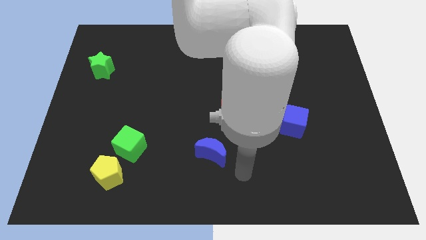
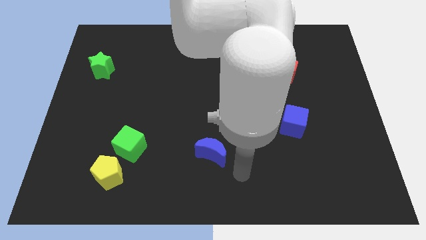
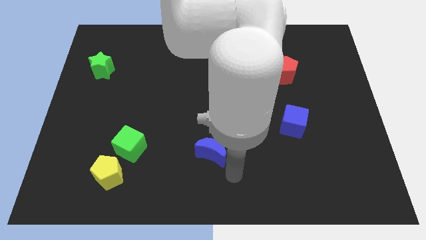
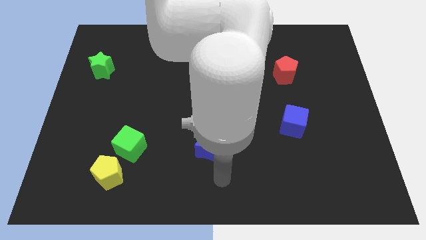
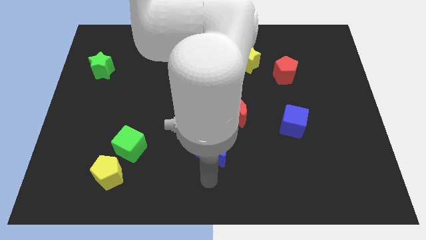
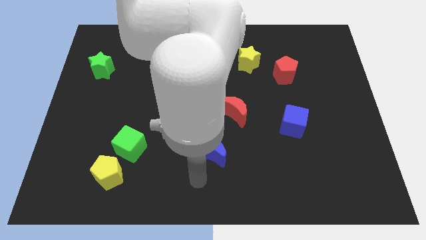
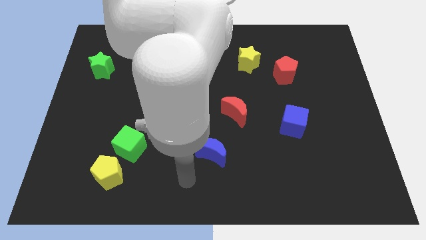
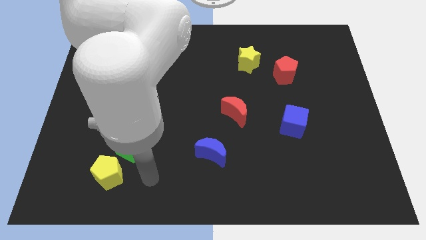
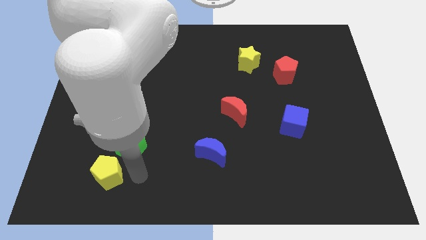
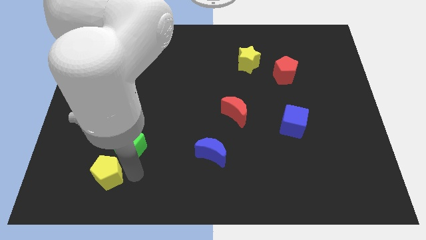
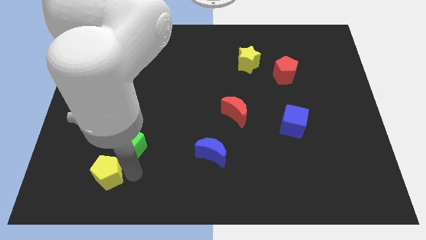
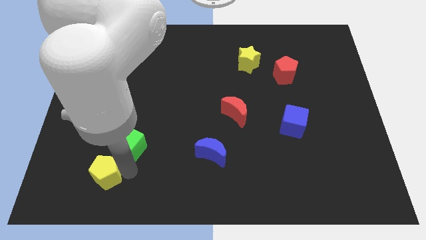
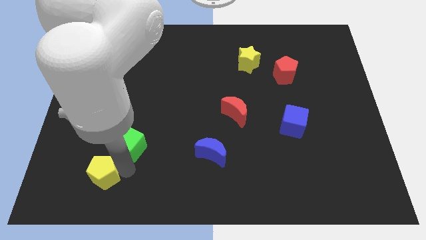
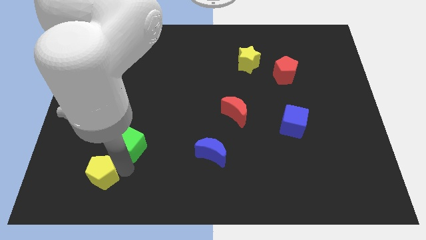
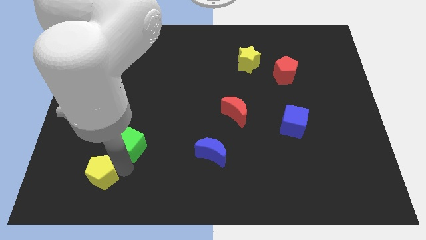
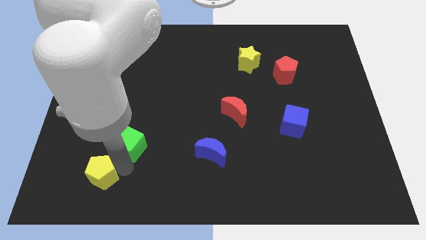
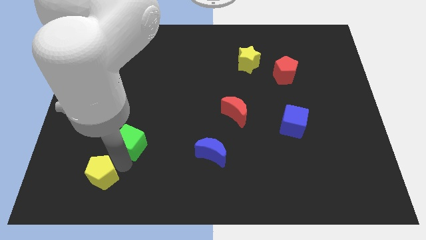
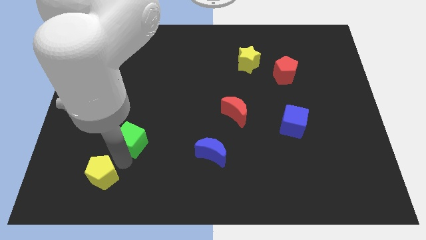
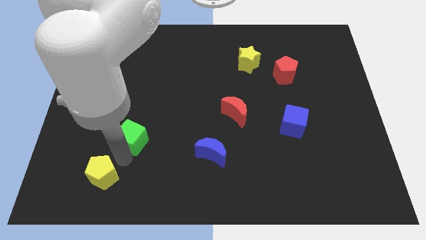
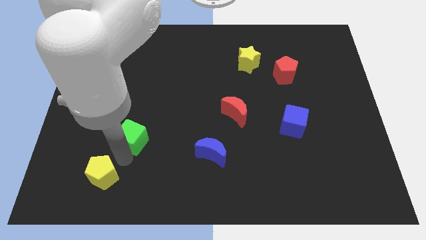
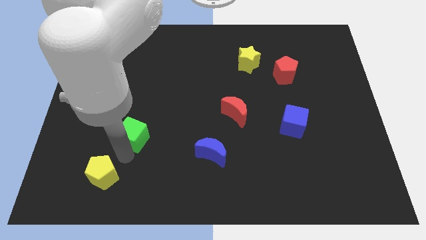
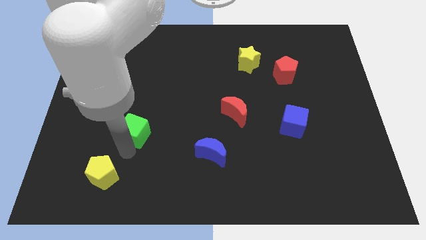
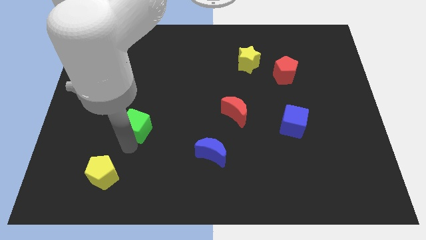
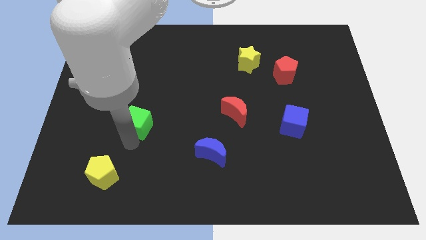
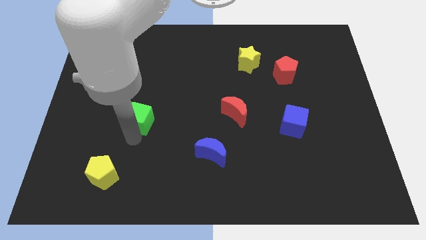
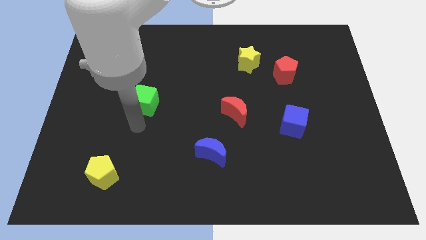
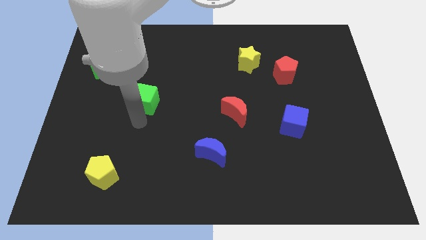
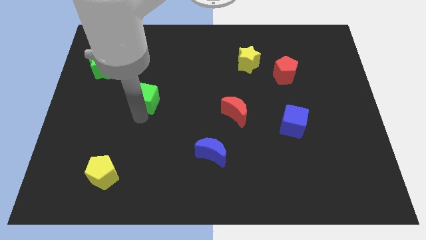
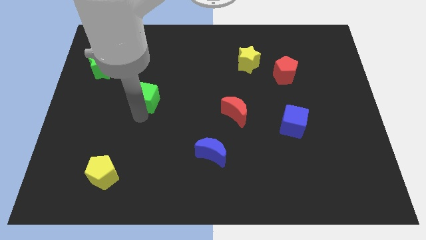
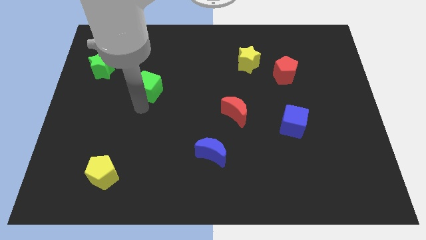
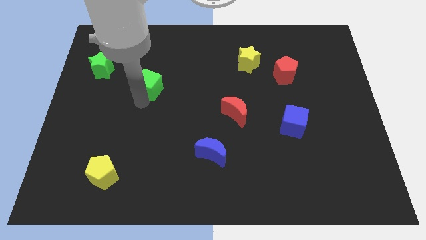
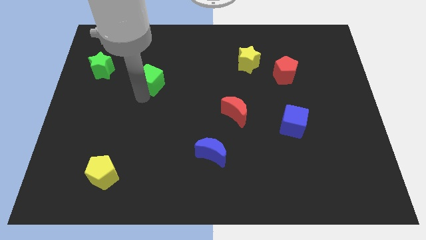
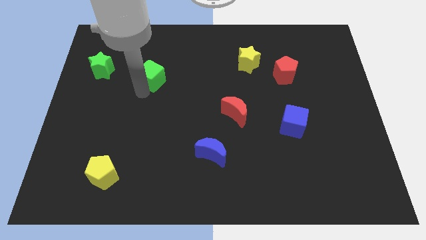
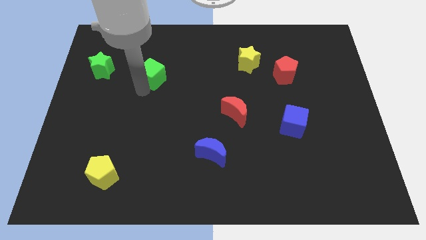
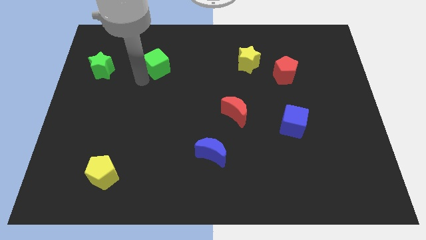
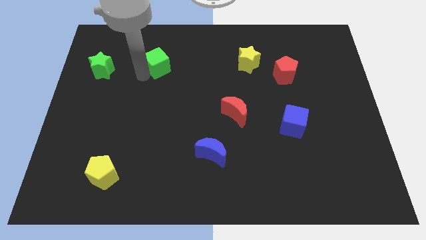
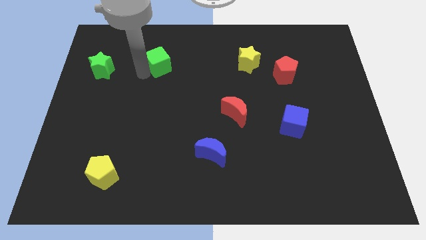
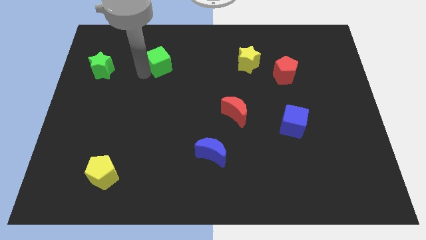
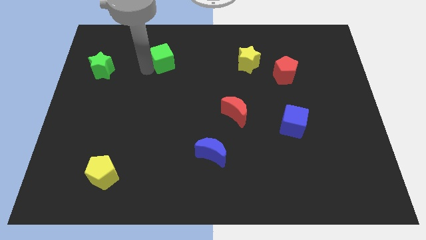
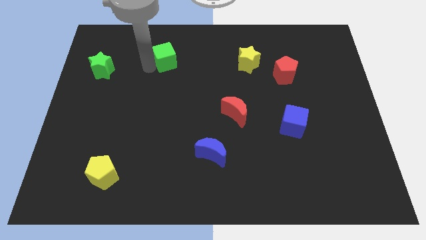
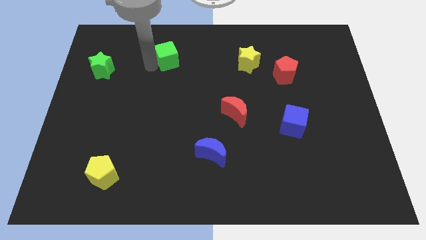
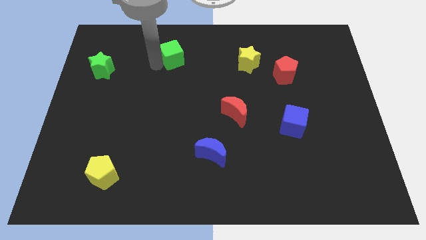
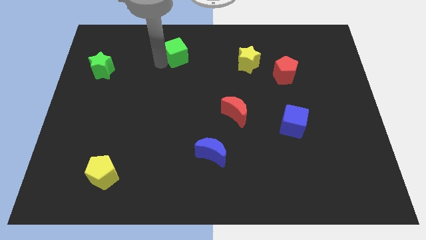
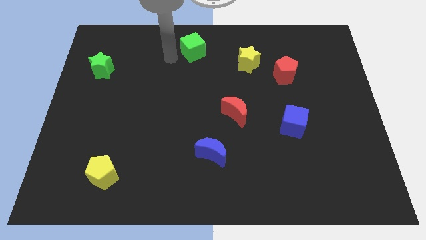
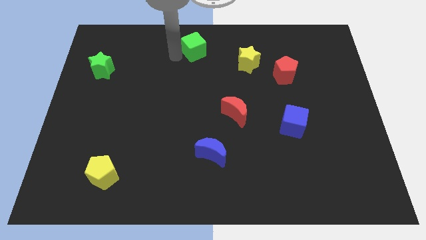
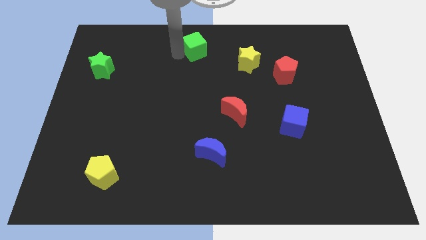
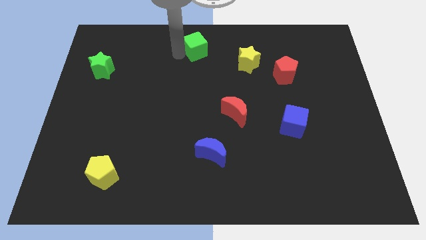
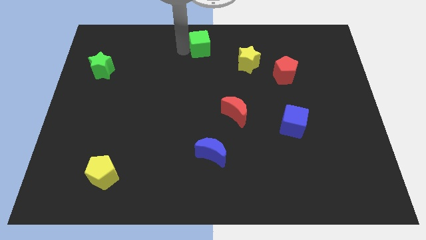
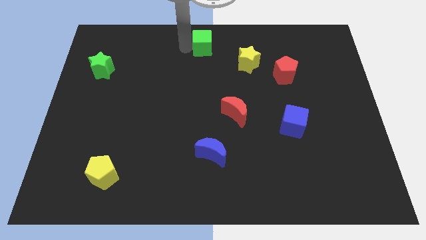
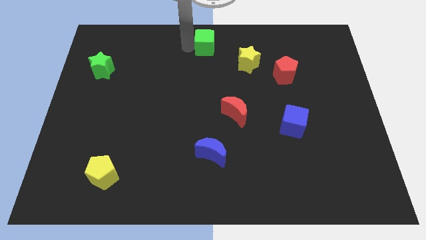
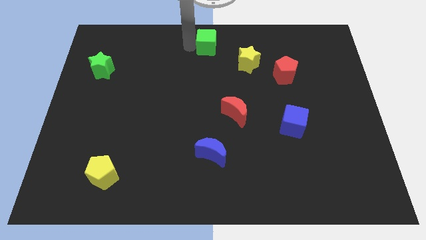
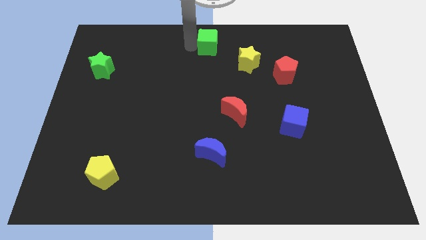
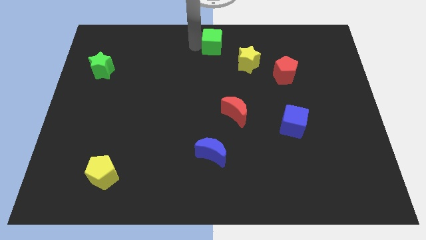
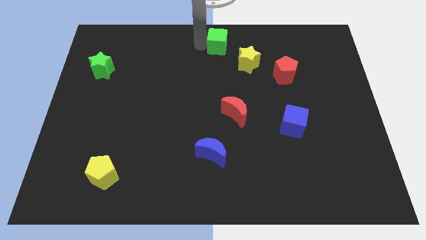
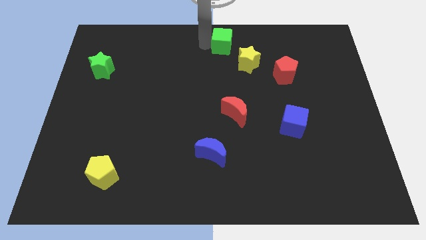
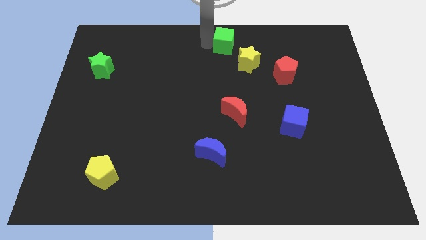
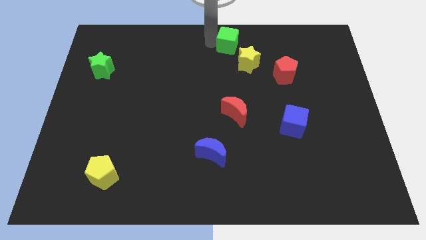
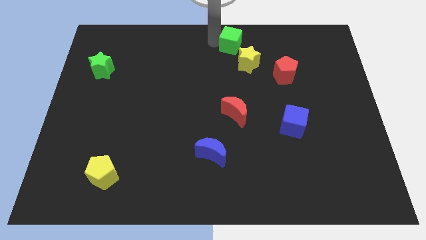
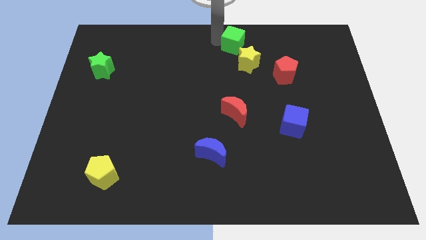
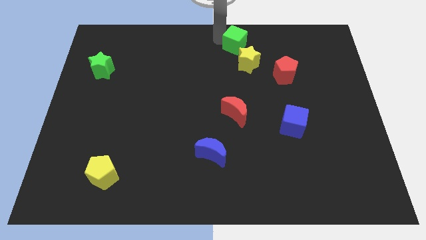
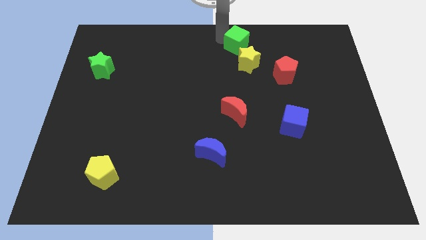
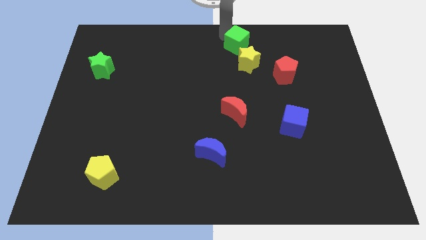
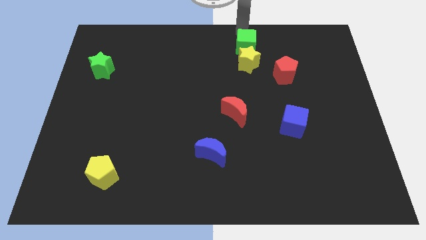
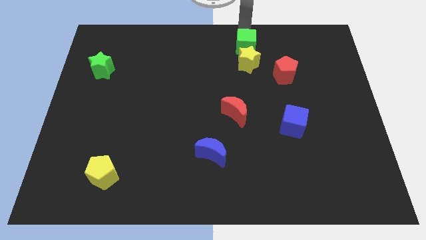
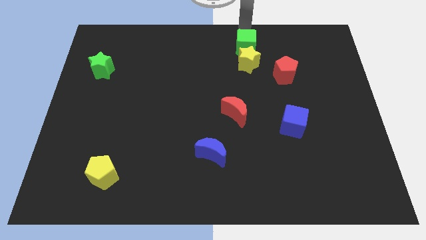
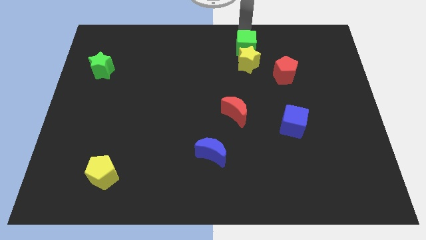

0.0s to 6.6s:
push the green cube next to the yellow star

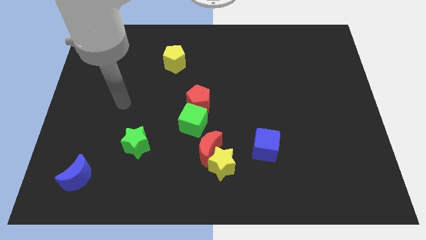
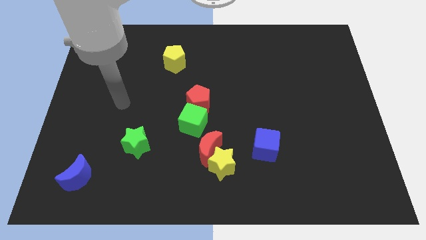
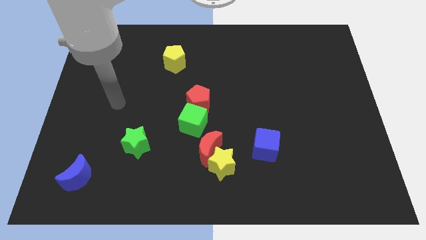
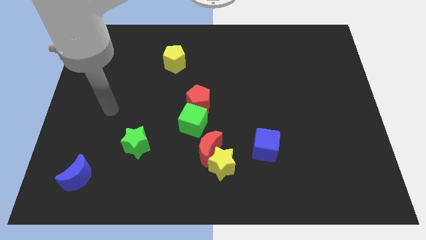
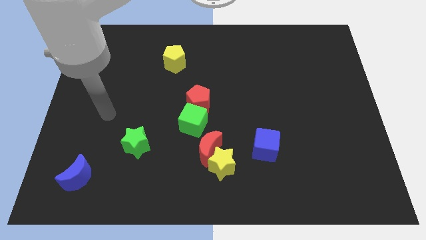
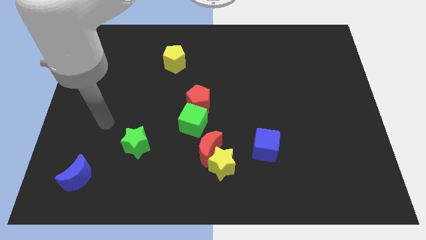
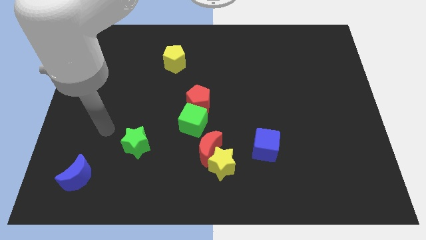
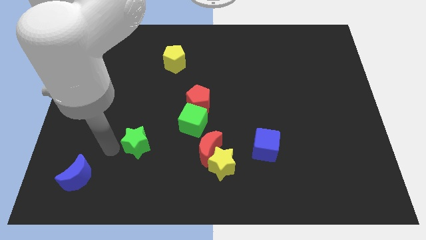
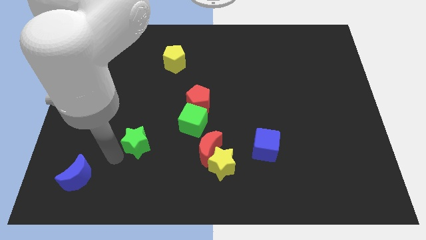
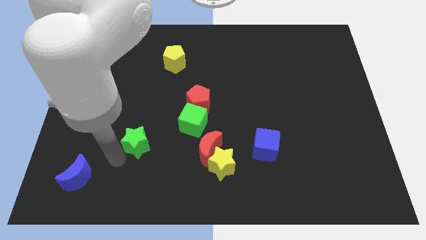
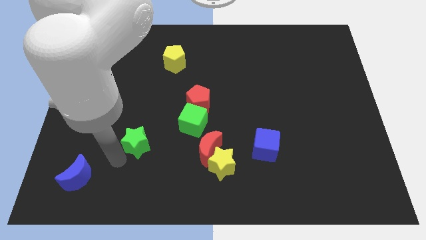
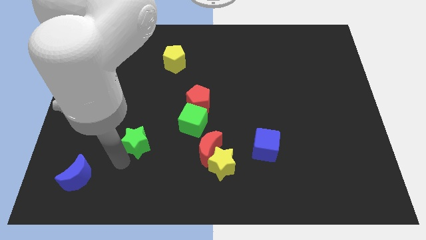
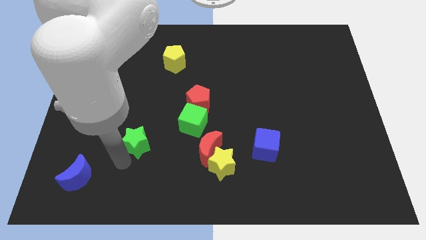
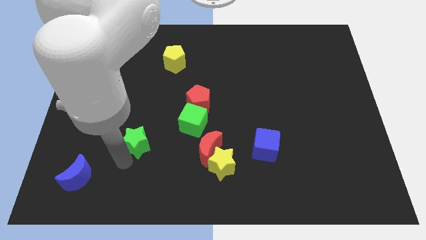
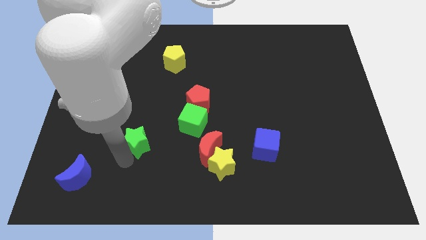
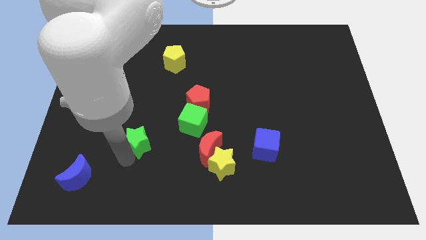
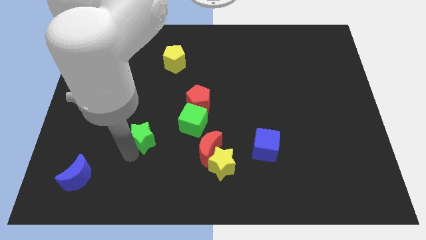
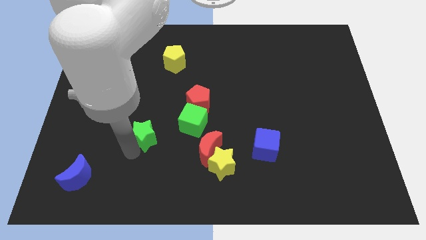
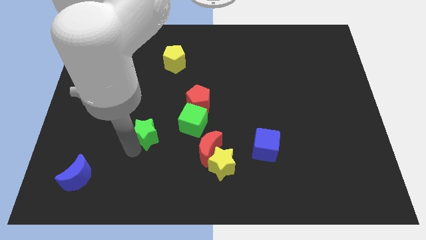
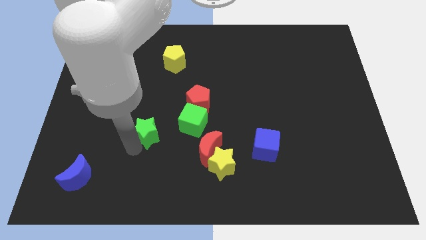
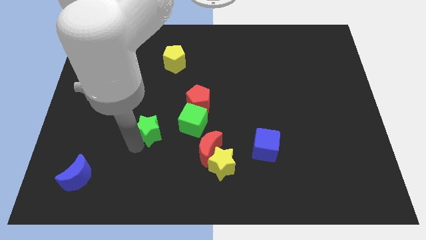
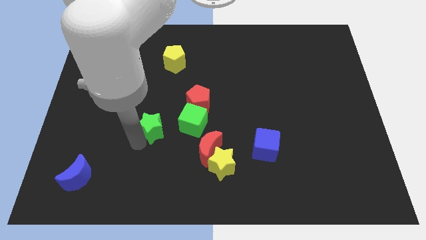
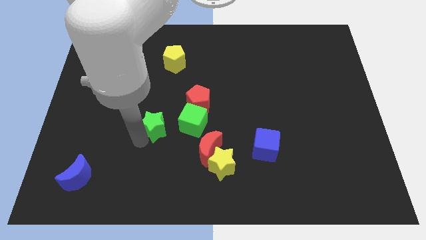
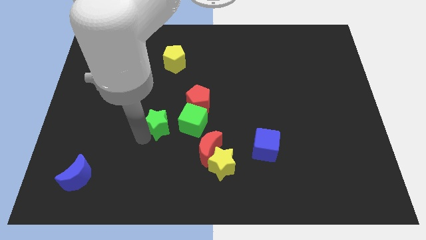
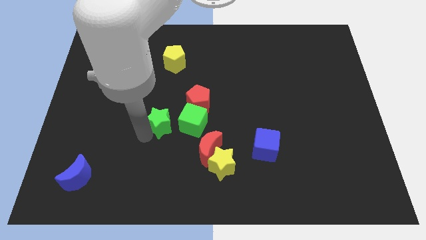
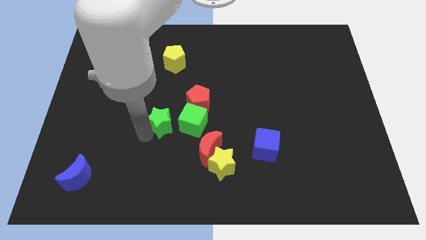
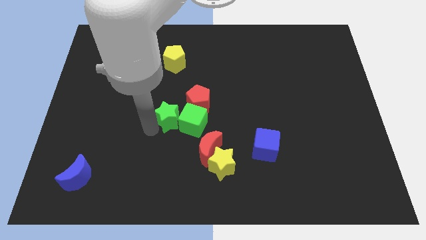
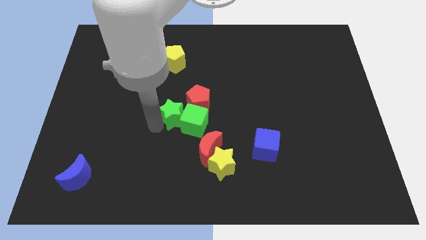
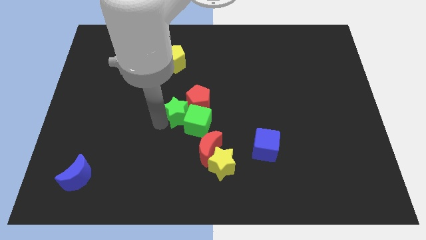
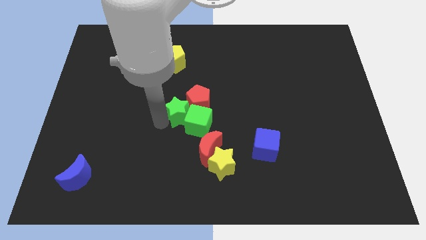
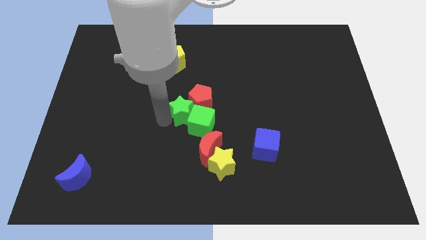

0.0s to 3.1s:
put the green star next to the red pentagon
